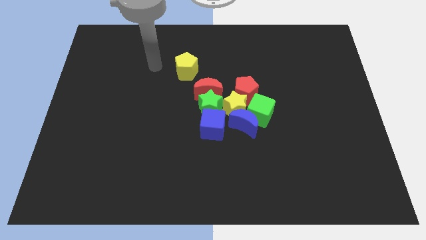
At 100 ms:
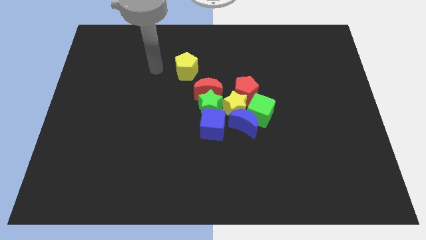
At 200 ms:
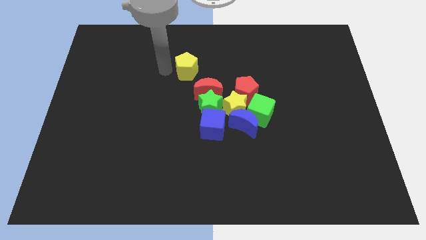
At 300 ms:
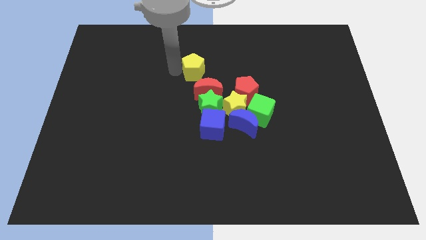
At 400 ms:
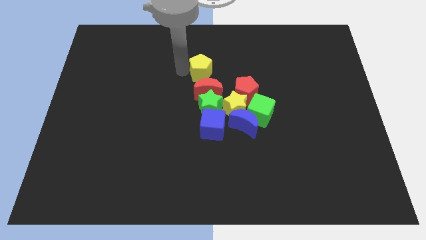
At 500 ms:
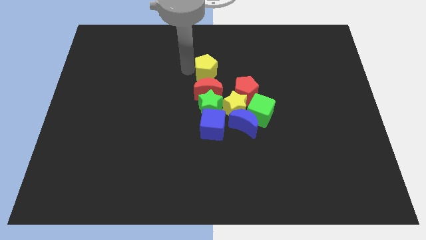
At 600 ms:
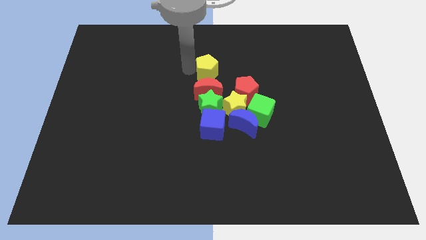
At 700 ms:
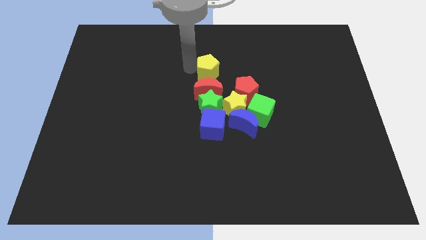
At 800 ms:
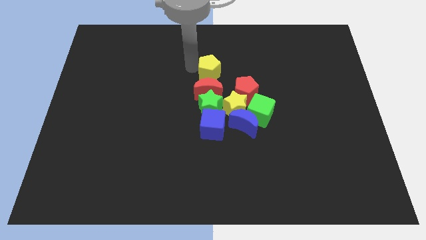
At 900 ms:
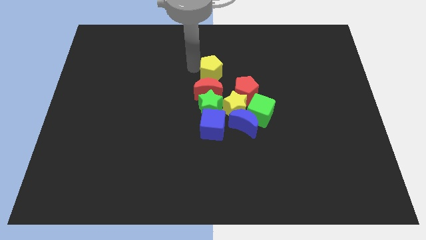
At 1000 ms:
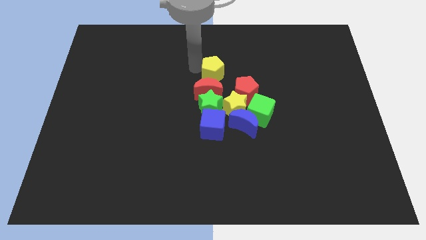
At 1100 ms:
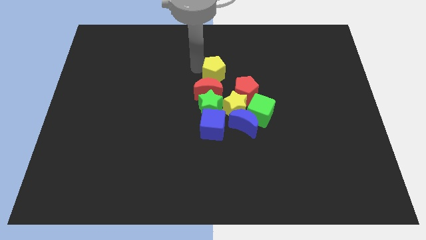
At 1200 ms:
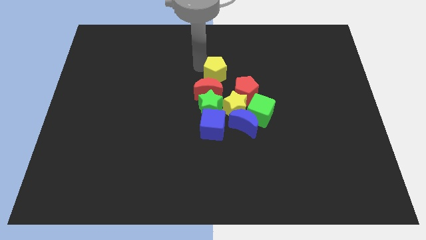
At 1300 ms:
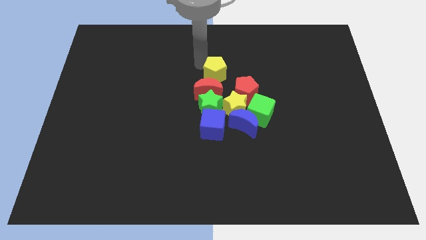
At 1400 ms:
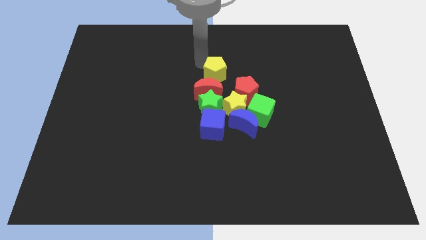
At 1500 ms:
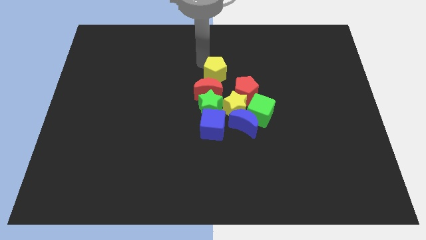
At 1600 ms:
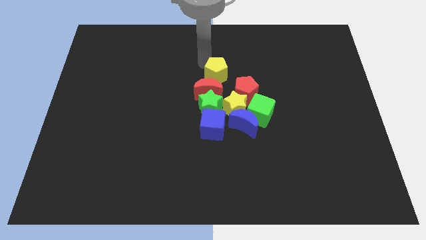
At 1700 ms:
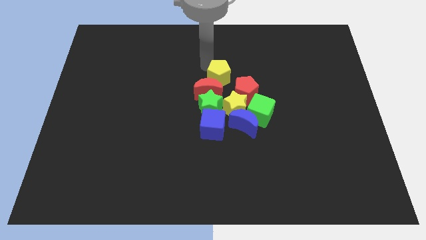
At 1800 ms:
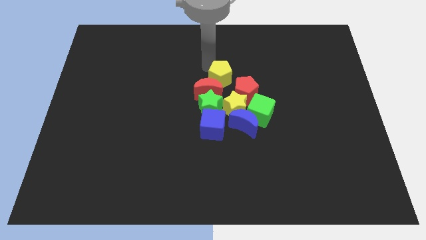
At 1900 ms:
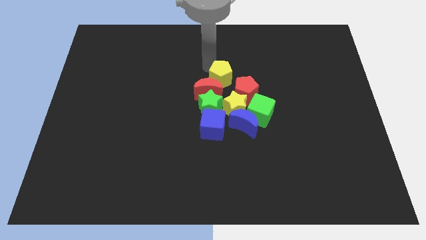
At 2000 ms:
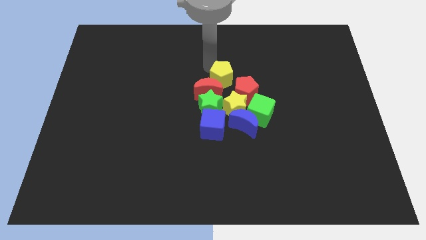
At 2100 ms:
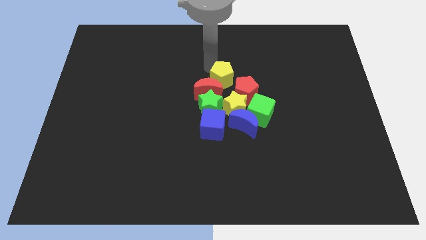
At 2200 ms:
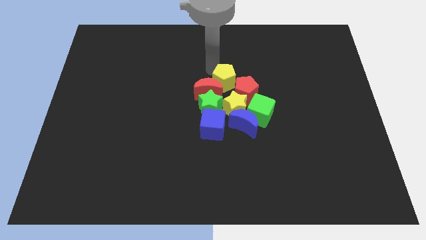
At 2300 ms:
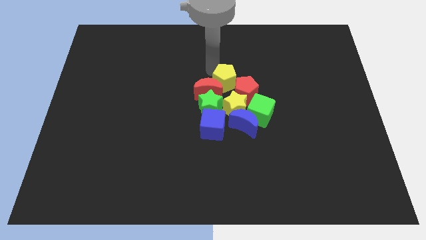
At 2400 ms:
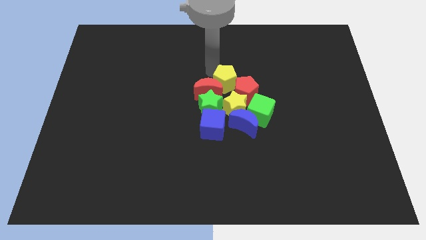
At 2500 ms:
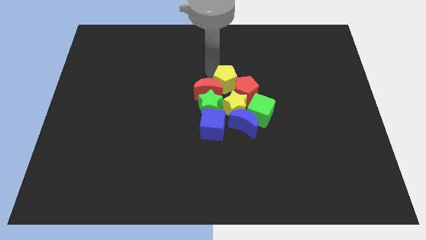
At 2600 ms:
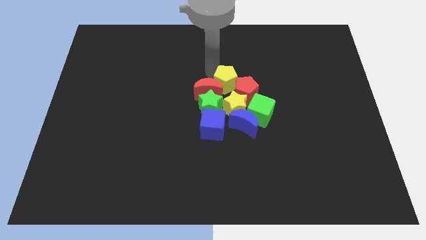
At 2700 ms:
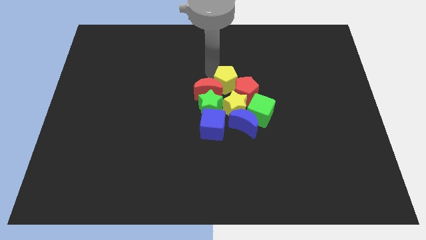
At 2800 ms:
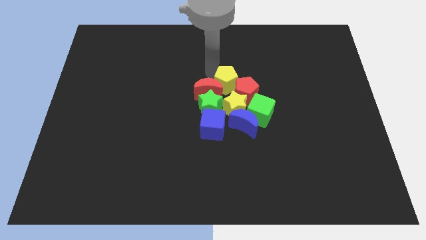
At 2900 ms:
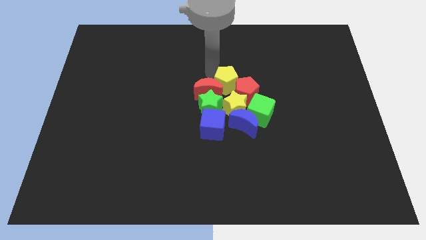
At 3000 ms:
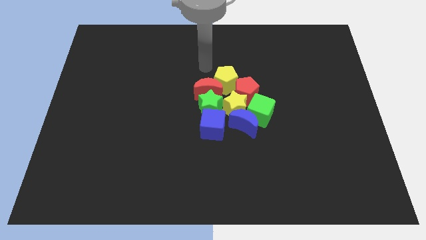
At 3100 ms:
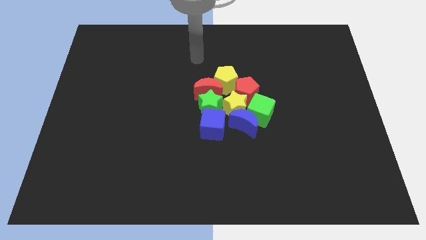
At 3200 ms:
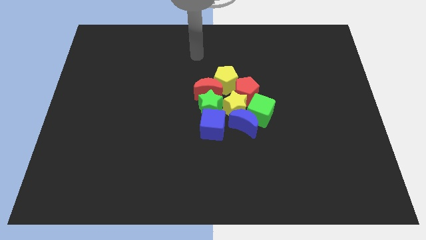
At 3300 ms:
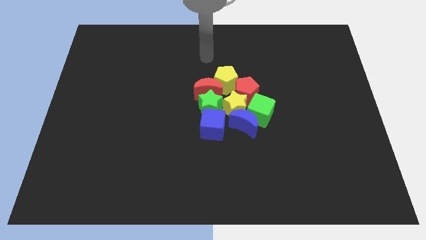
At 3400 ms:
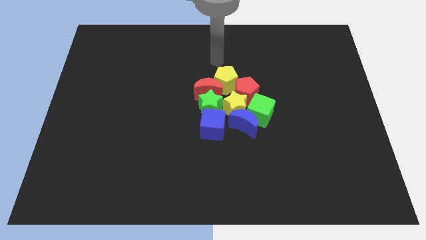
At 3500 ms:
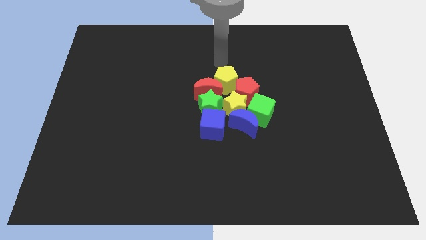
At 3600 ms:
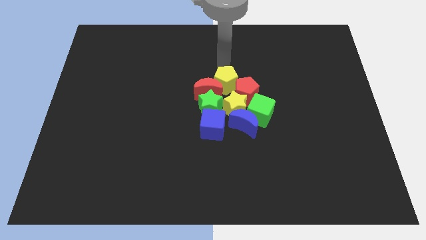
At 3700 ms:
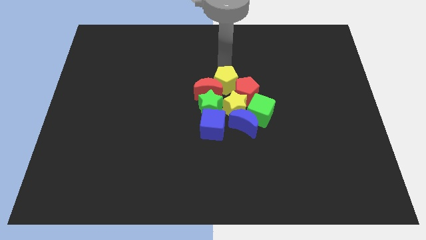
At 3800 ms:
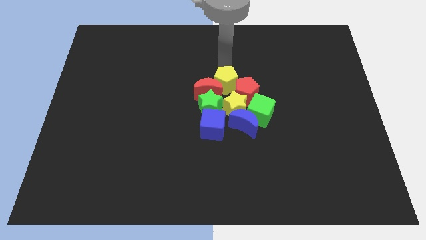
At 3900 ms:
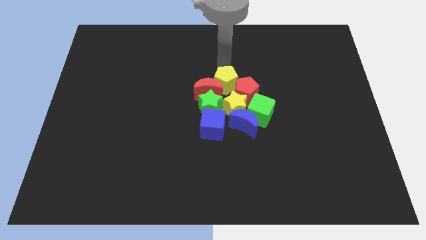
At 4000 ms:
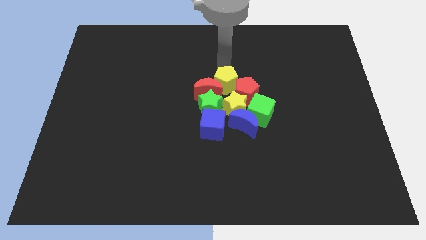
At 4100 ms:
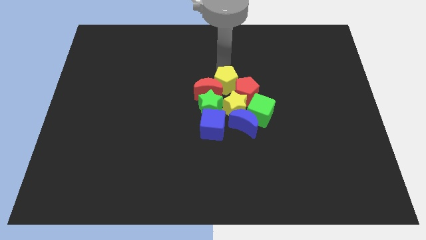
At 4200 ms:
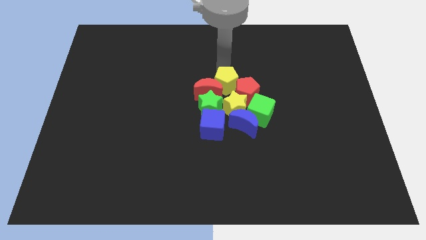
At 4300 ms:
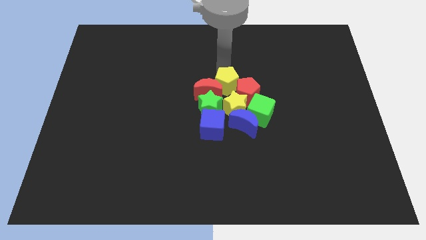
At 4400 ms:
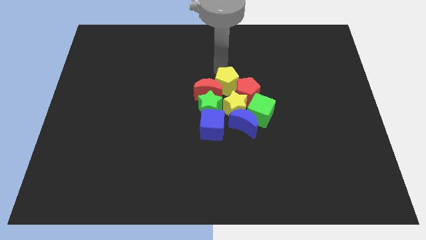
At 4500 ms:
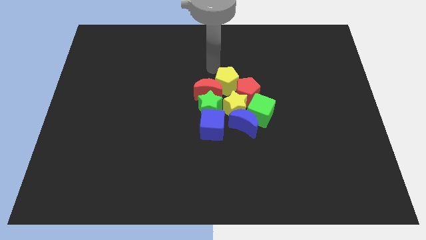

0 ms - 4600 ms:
place the yellow pentagon in between red moon and red pentagon

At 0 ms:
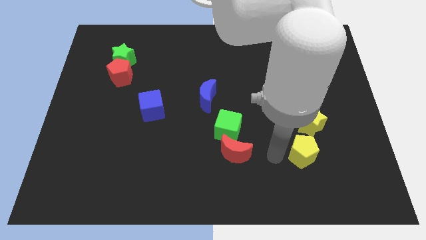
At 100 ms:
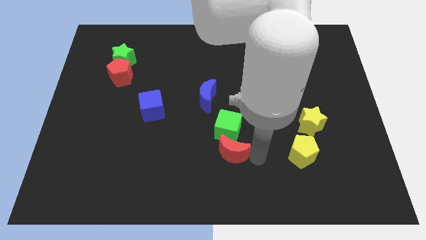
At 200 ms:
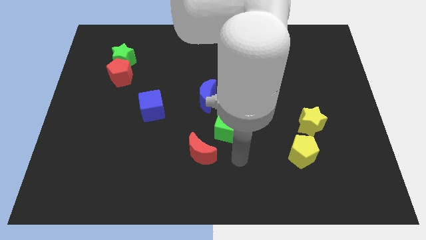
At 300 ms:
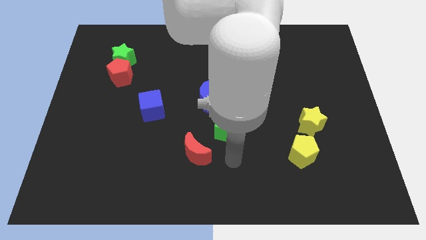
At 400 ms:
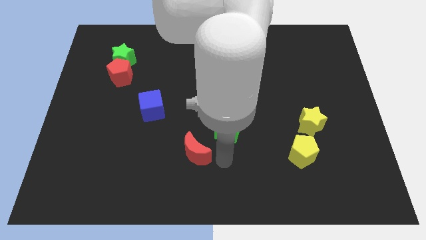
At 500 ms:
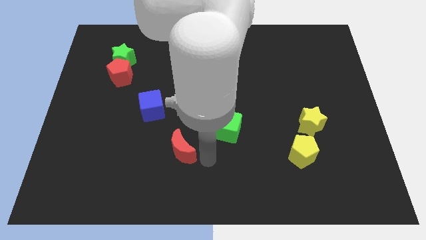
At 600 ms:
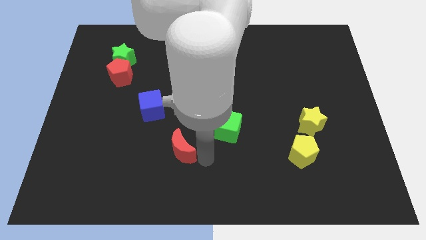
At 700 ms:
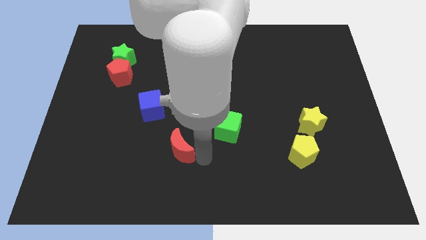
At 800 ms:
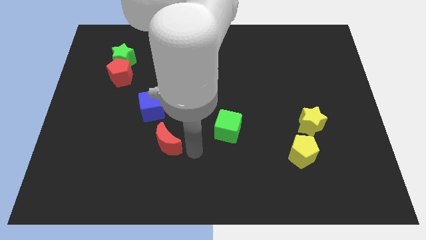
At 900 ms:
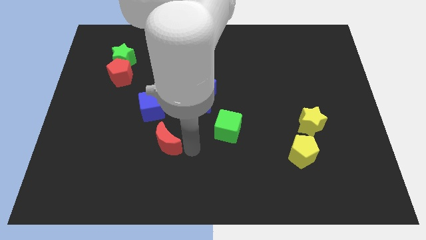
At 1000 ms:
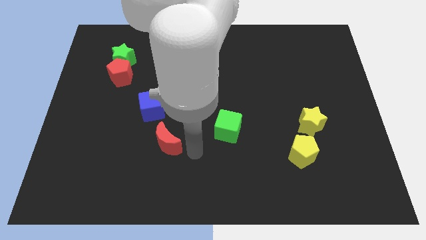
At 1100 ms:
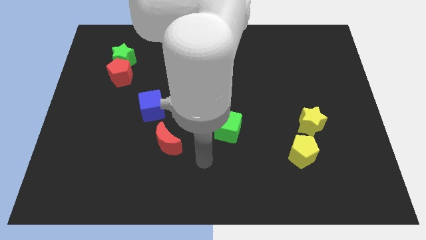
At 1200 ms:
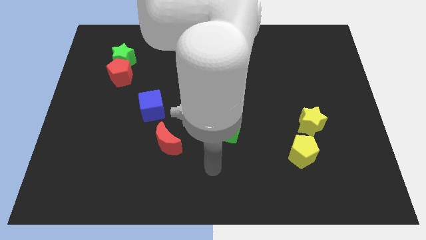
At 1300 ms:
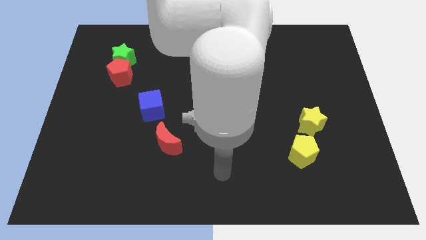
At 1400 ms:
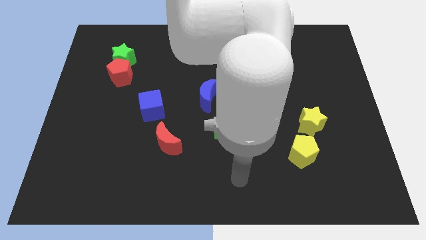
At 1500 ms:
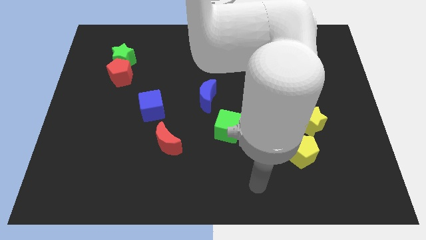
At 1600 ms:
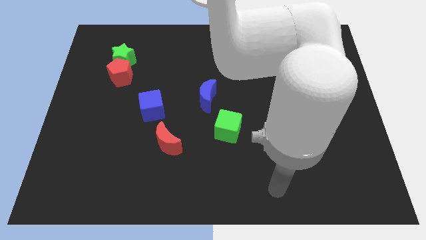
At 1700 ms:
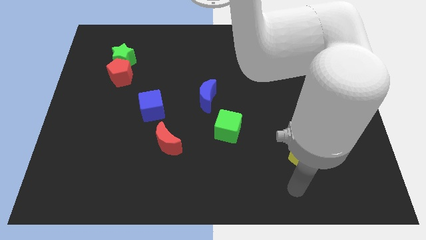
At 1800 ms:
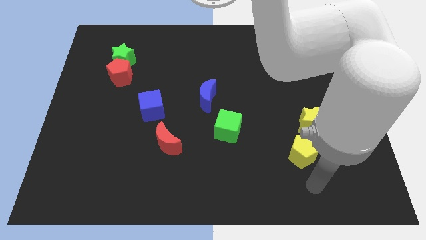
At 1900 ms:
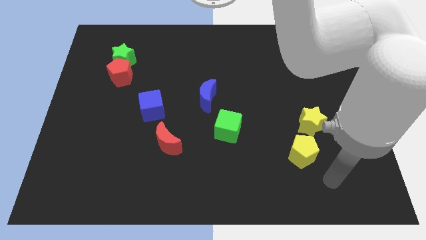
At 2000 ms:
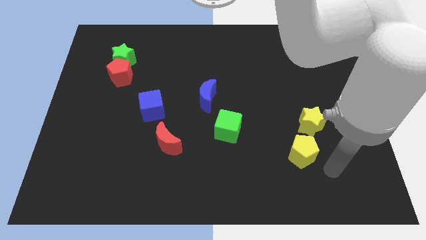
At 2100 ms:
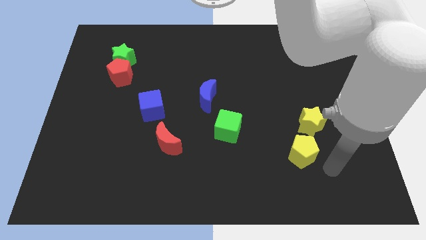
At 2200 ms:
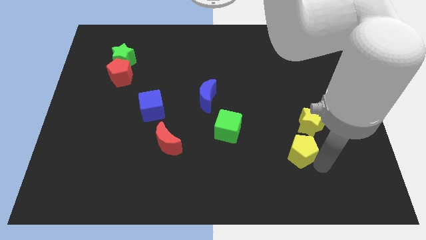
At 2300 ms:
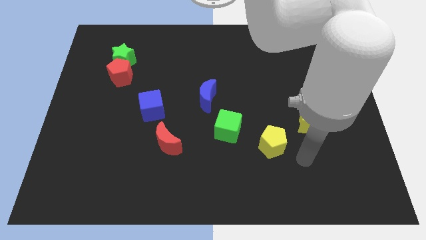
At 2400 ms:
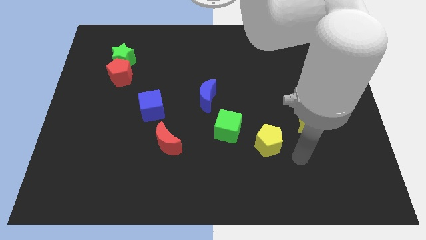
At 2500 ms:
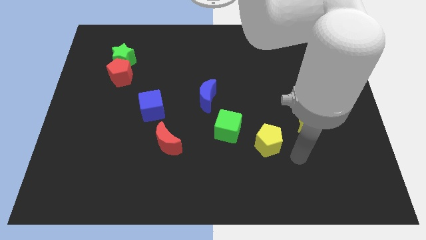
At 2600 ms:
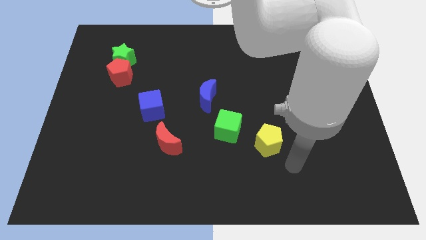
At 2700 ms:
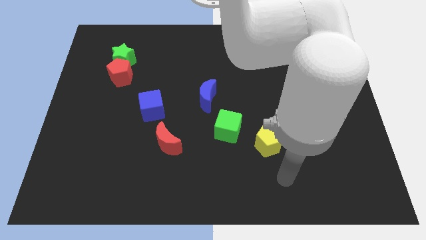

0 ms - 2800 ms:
push the red crescent to the bottom right of the blue cube

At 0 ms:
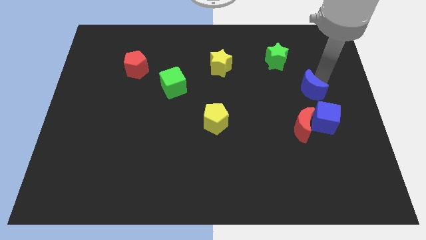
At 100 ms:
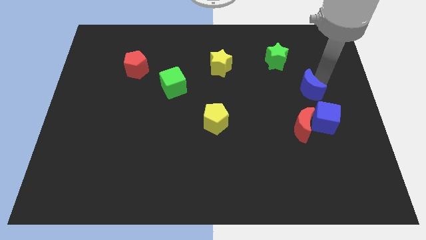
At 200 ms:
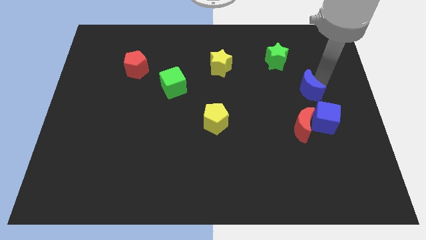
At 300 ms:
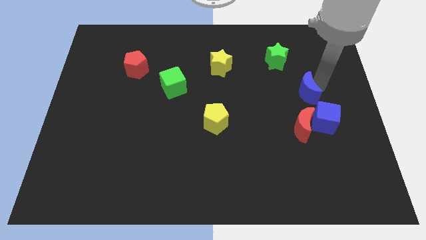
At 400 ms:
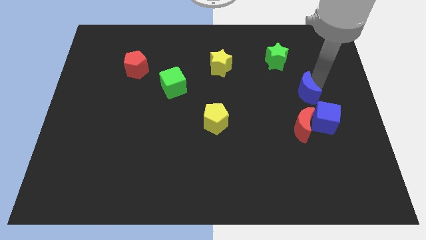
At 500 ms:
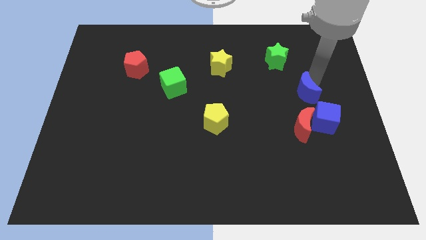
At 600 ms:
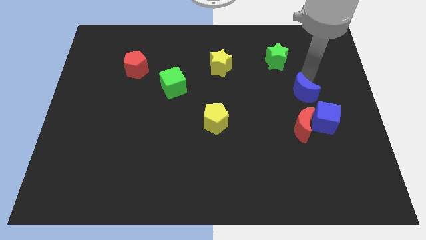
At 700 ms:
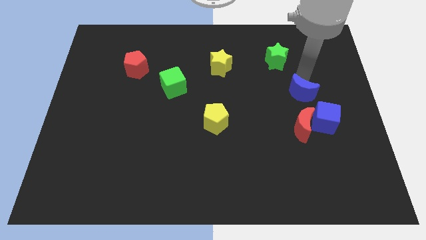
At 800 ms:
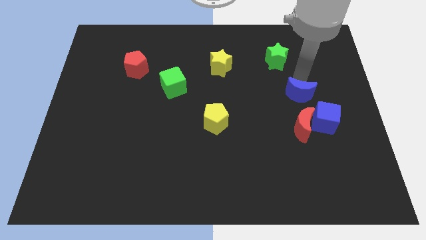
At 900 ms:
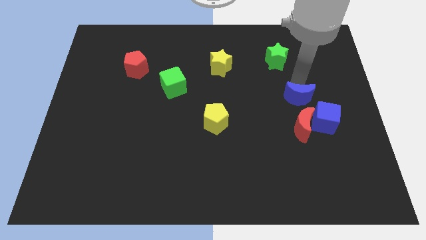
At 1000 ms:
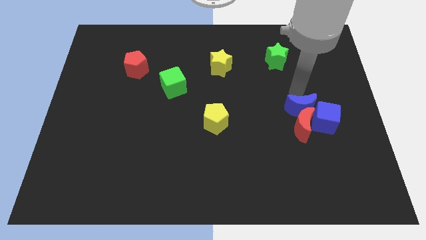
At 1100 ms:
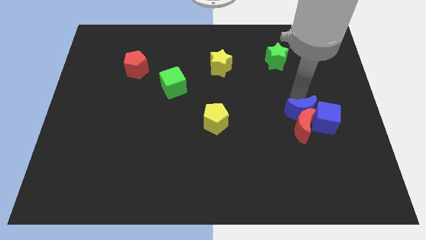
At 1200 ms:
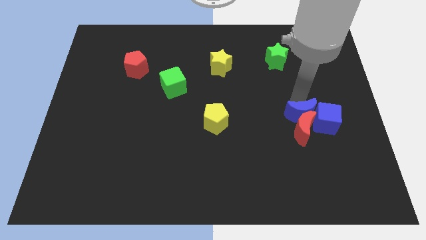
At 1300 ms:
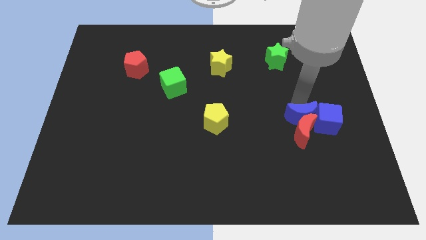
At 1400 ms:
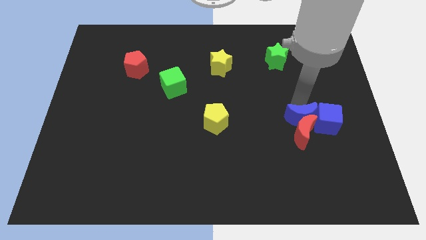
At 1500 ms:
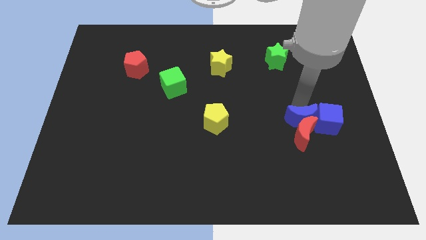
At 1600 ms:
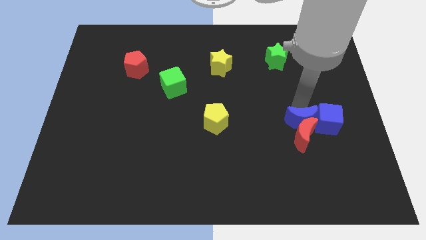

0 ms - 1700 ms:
put the blue moon into red moon
